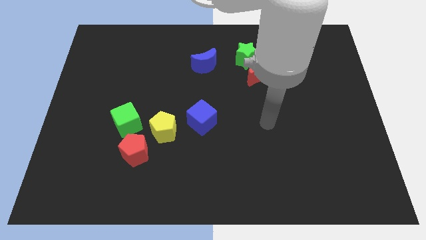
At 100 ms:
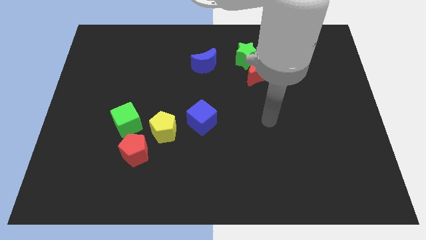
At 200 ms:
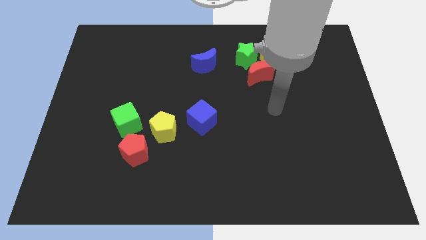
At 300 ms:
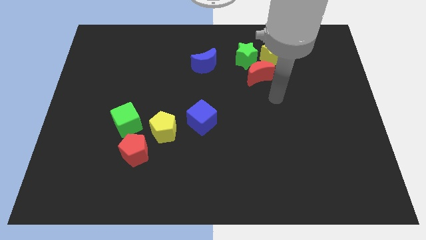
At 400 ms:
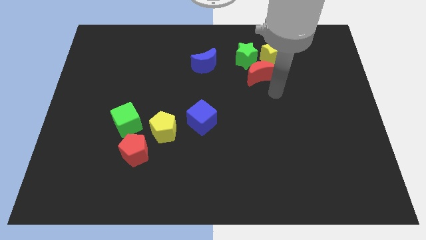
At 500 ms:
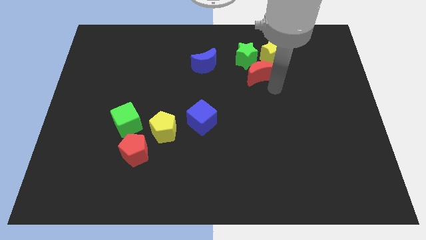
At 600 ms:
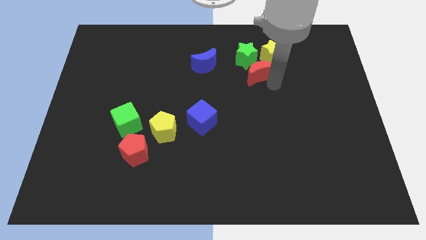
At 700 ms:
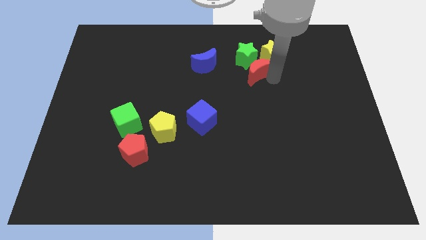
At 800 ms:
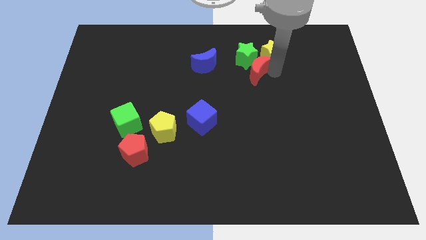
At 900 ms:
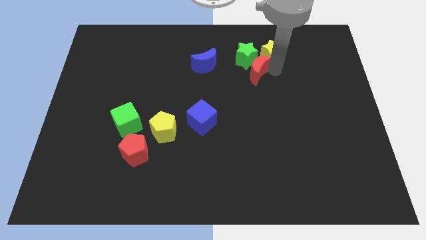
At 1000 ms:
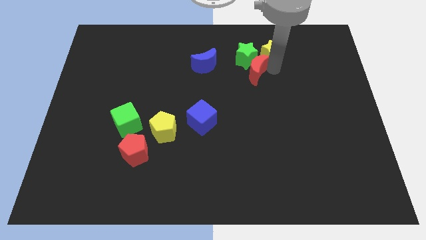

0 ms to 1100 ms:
slightly move the red crescent into the yellow star

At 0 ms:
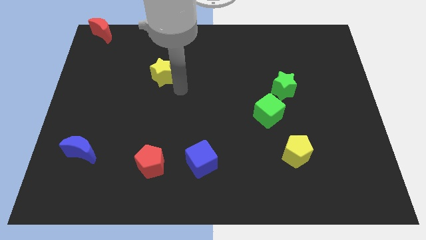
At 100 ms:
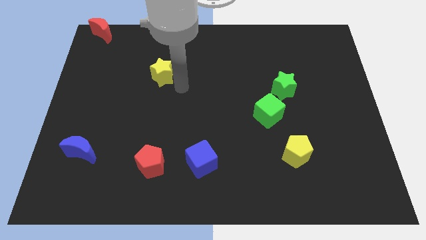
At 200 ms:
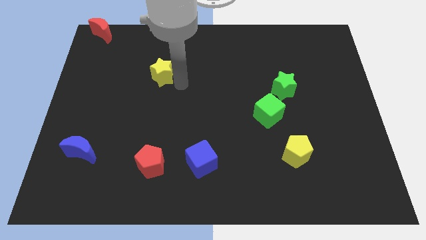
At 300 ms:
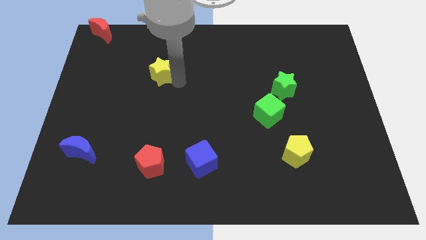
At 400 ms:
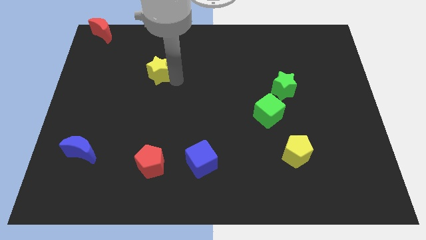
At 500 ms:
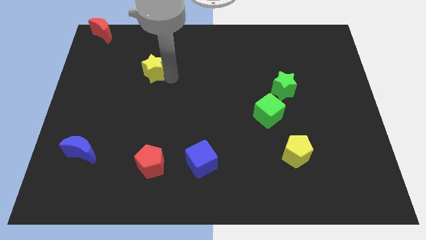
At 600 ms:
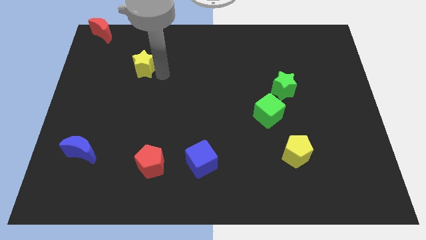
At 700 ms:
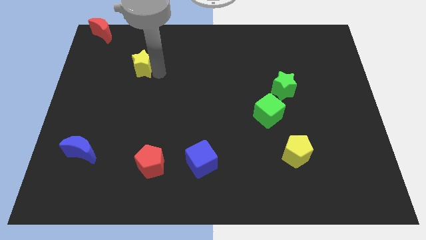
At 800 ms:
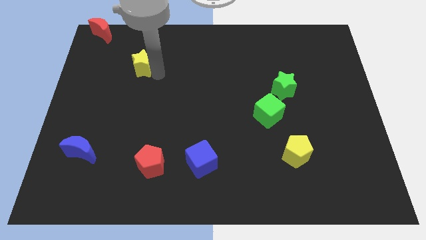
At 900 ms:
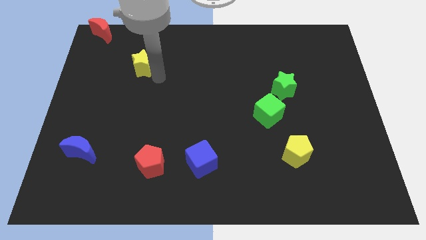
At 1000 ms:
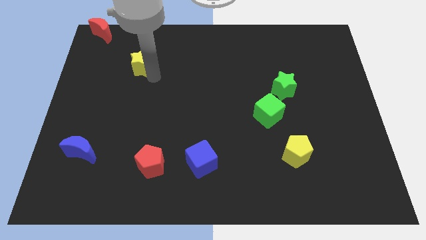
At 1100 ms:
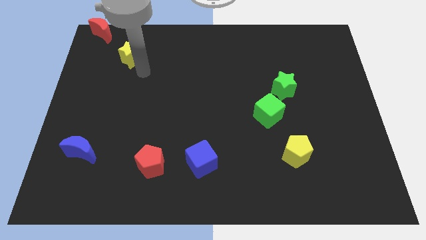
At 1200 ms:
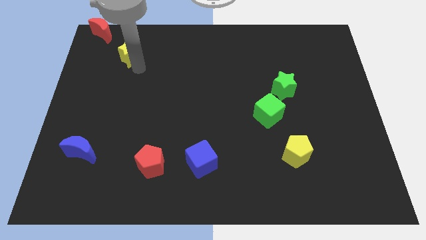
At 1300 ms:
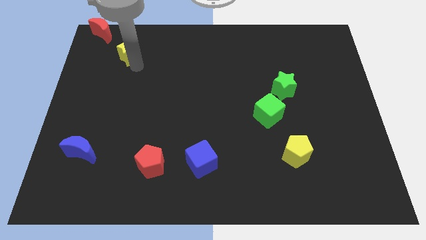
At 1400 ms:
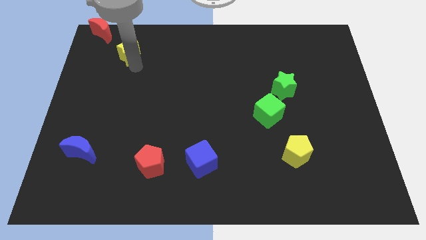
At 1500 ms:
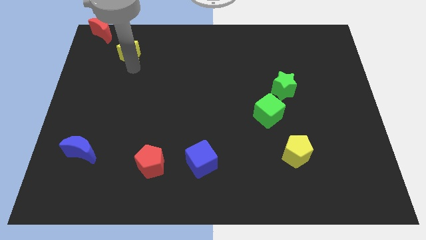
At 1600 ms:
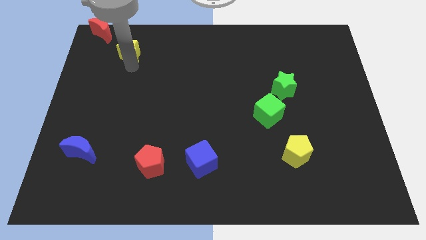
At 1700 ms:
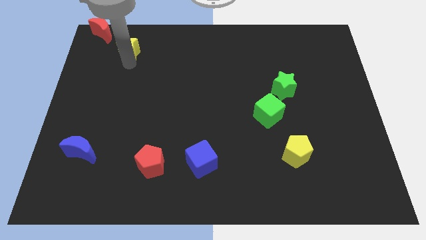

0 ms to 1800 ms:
place yellow start below red crescent

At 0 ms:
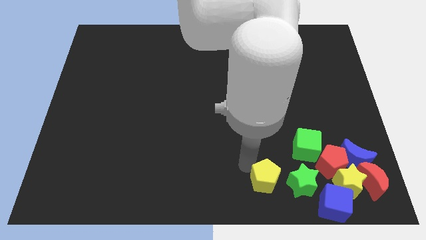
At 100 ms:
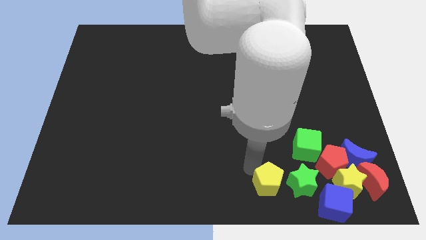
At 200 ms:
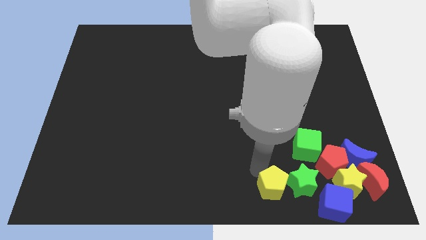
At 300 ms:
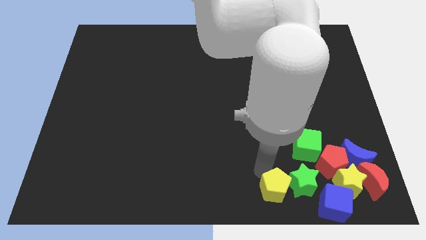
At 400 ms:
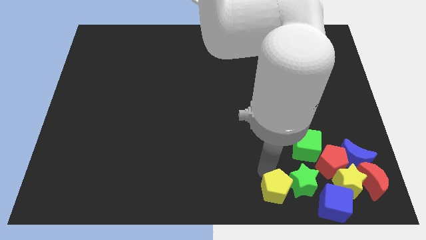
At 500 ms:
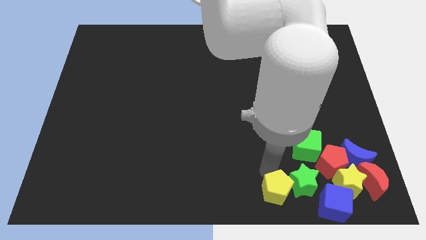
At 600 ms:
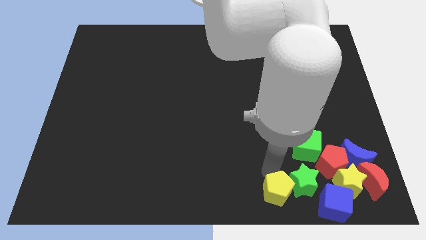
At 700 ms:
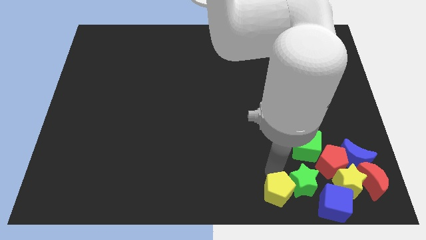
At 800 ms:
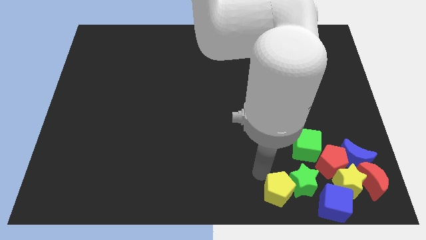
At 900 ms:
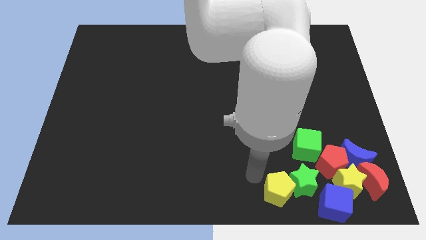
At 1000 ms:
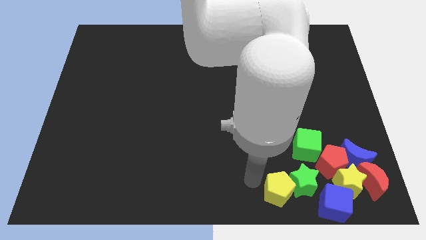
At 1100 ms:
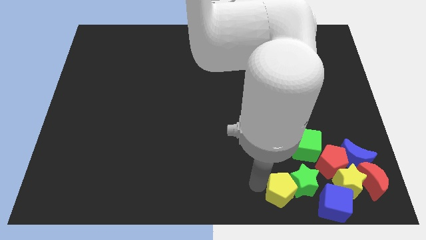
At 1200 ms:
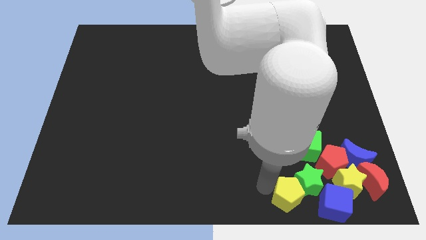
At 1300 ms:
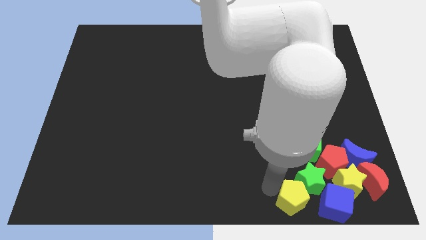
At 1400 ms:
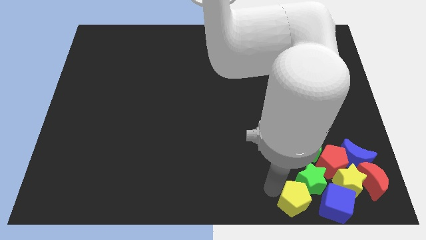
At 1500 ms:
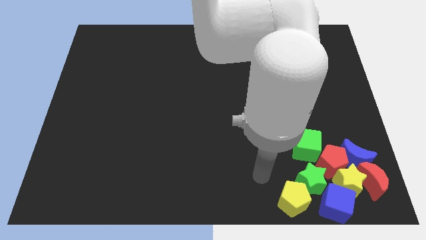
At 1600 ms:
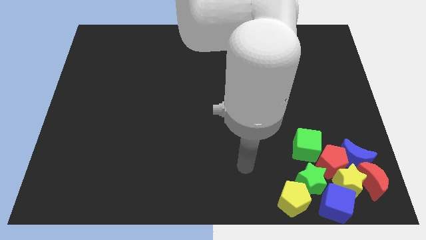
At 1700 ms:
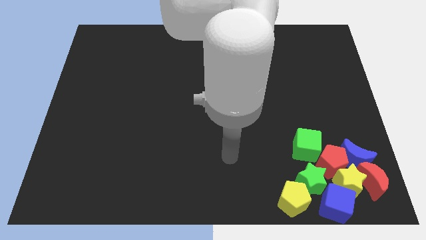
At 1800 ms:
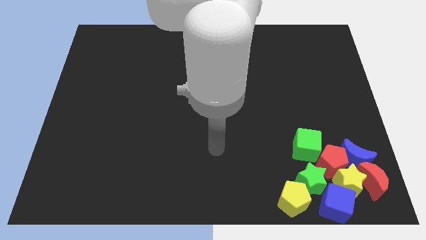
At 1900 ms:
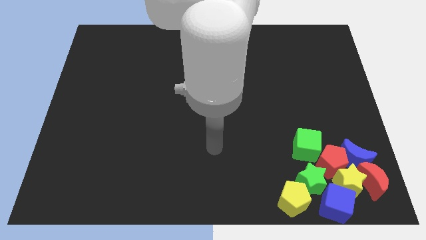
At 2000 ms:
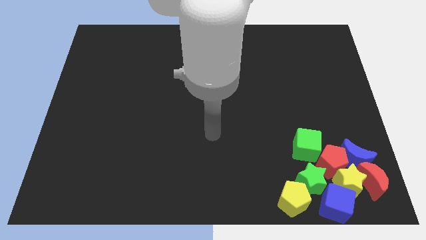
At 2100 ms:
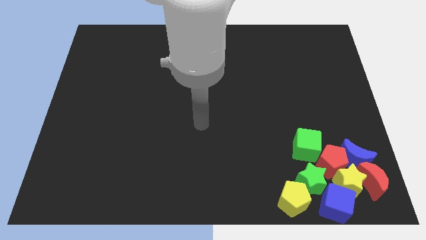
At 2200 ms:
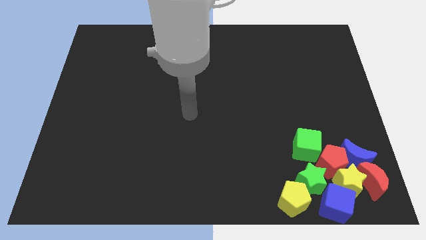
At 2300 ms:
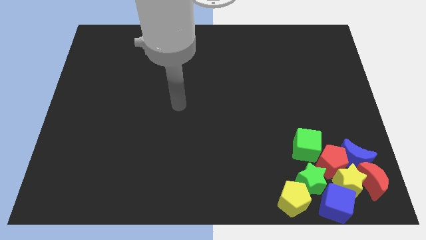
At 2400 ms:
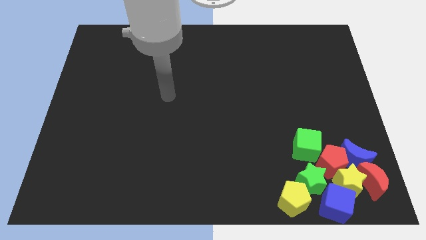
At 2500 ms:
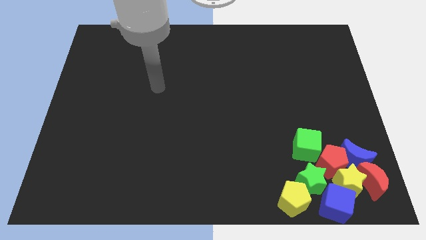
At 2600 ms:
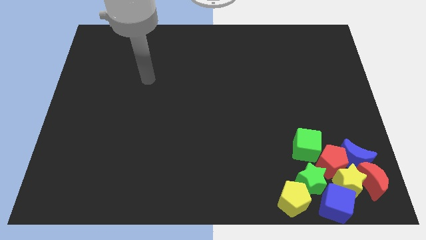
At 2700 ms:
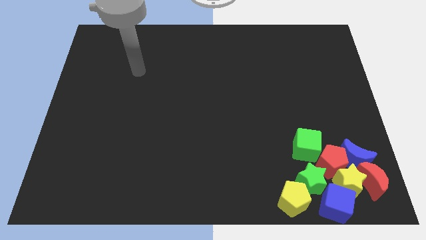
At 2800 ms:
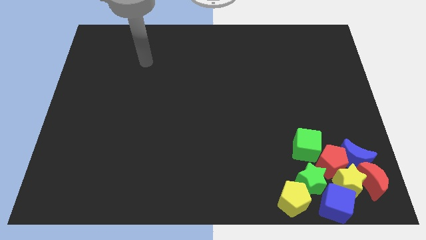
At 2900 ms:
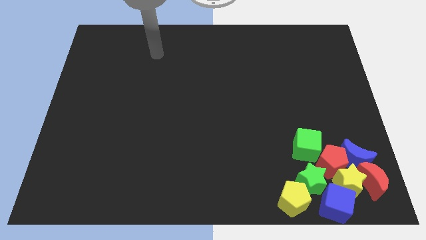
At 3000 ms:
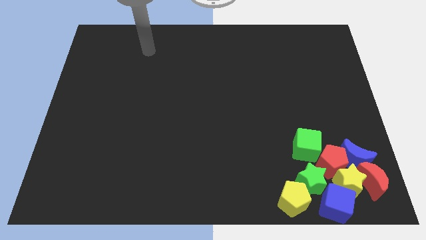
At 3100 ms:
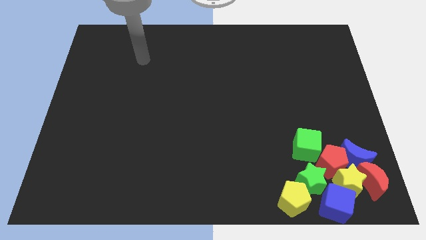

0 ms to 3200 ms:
push the yellow pentagon into the green star and move away

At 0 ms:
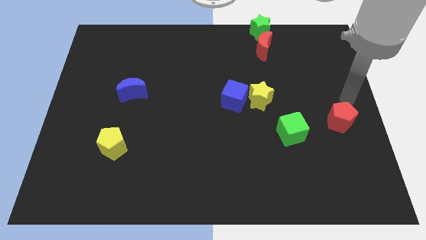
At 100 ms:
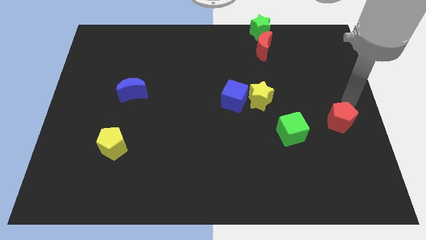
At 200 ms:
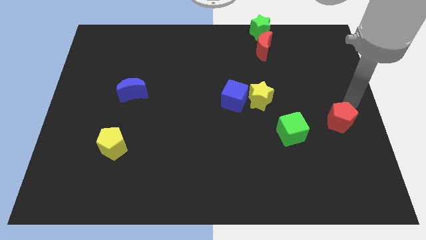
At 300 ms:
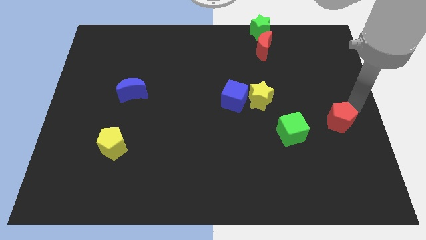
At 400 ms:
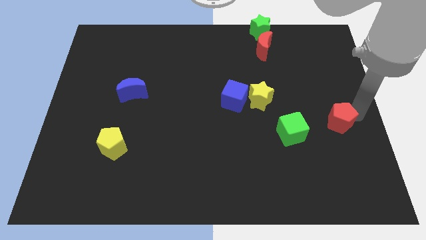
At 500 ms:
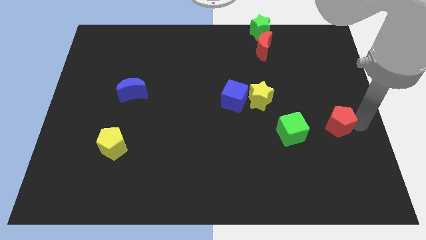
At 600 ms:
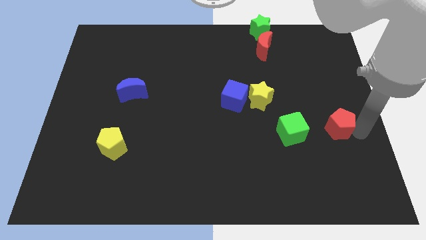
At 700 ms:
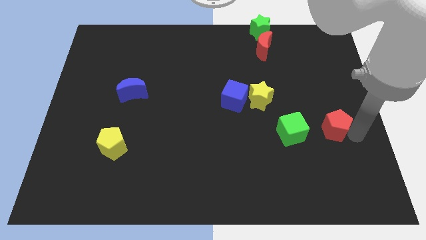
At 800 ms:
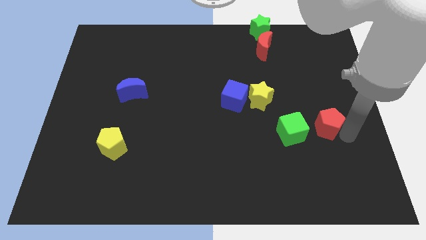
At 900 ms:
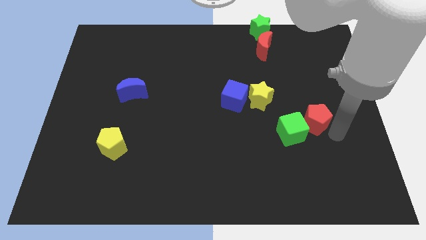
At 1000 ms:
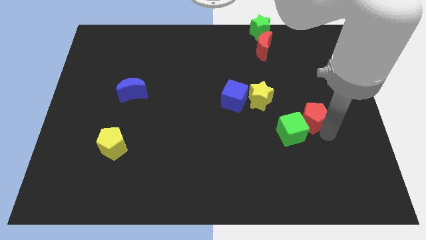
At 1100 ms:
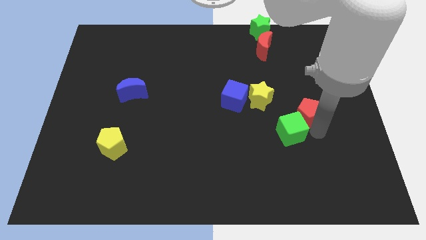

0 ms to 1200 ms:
push the red pentagon into the green cube

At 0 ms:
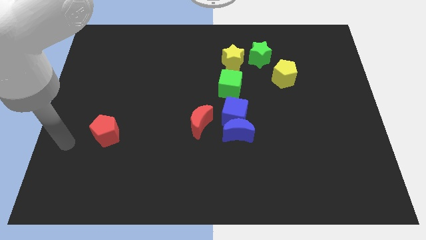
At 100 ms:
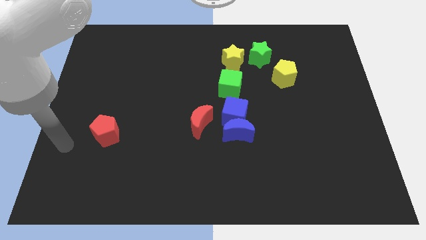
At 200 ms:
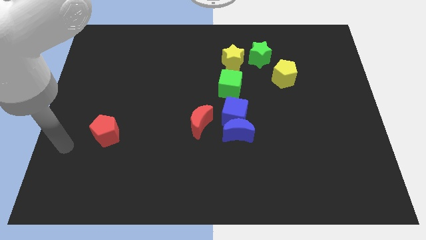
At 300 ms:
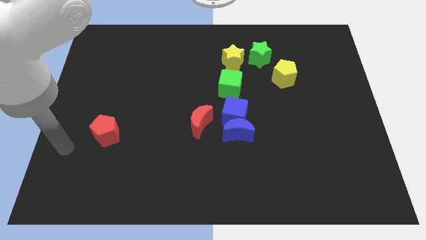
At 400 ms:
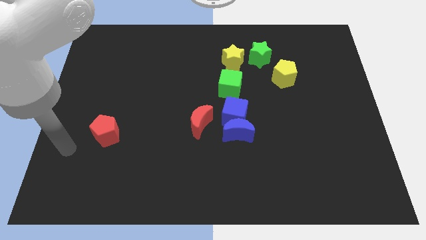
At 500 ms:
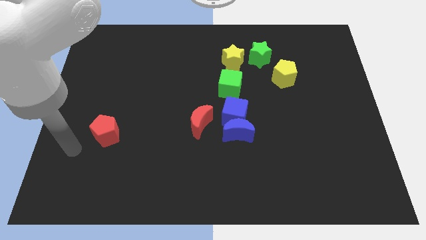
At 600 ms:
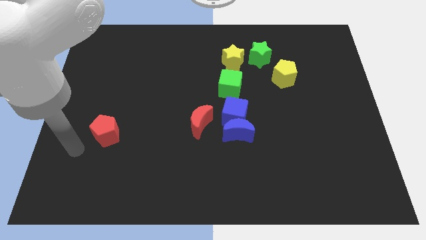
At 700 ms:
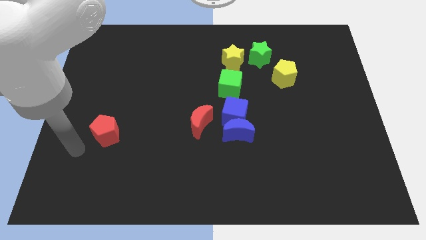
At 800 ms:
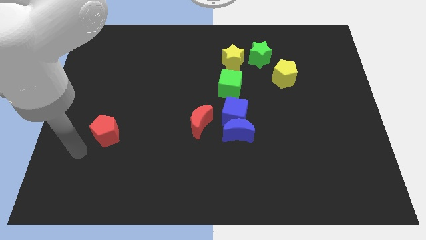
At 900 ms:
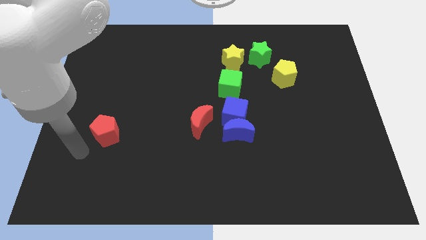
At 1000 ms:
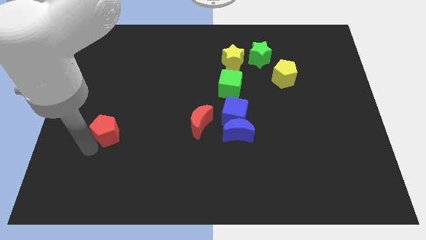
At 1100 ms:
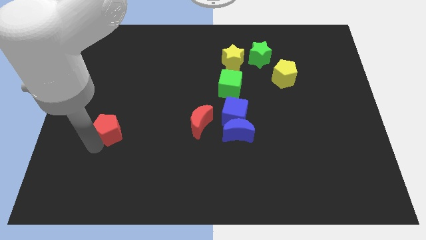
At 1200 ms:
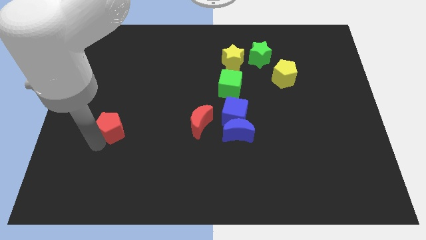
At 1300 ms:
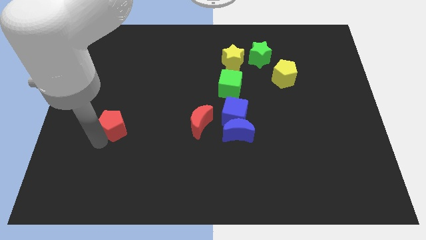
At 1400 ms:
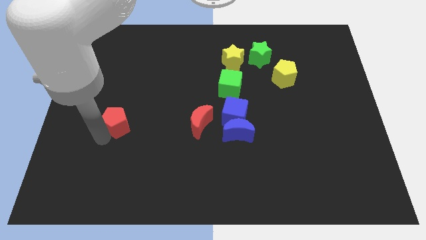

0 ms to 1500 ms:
place the red pentagon horizontally left to the red moon

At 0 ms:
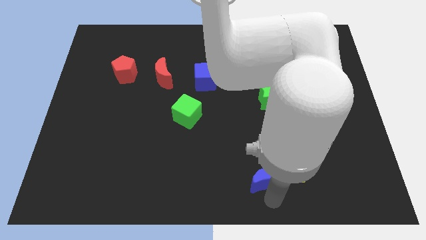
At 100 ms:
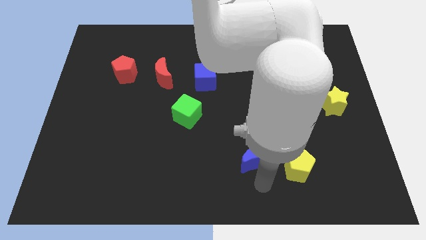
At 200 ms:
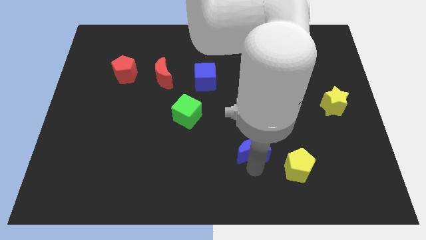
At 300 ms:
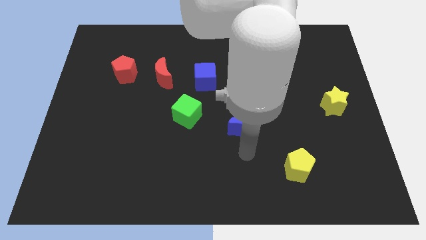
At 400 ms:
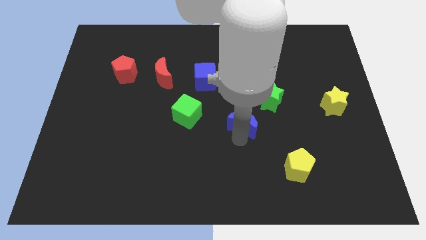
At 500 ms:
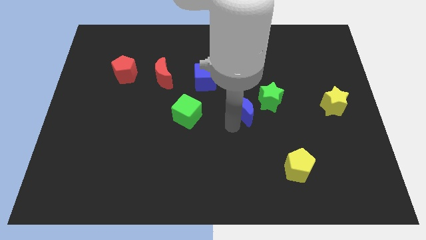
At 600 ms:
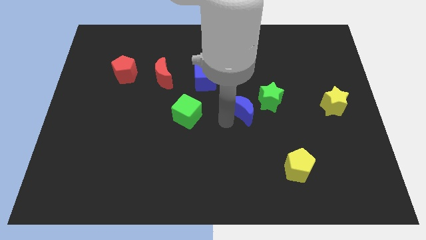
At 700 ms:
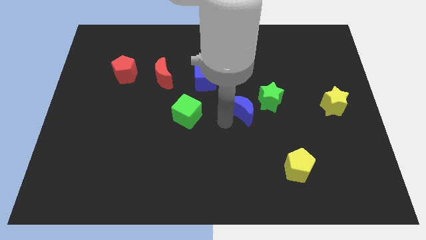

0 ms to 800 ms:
move the blue crescent slightly towards the blue cube
